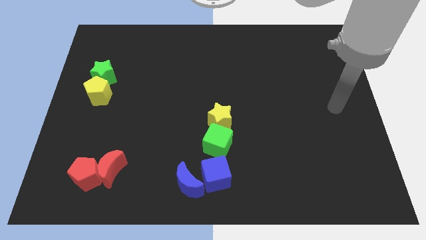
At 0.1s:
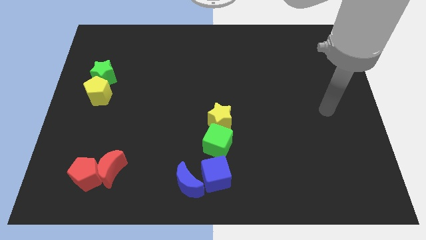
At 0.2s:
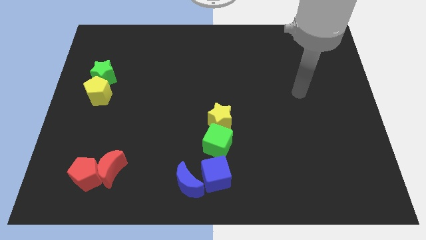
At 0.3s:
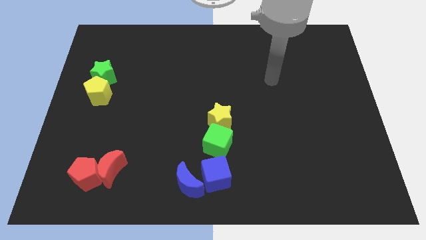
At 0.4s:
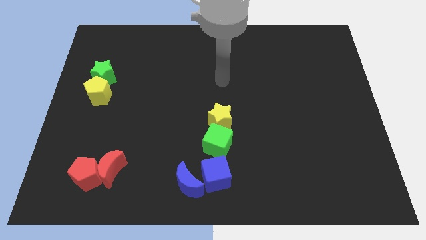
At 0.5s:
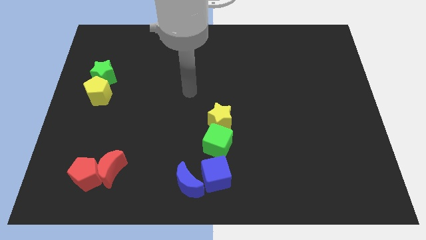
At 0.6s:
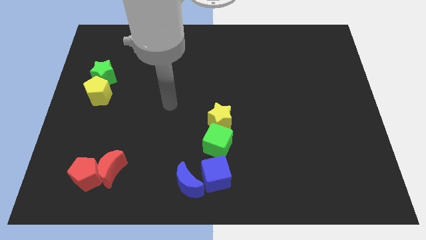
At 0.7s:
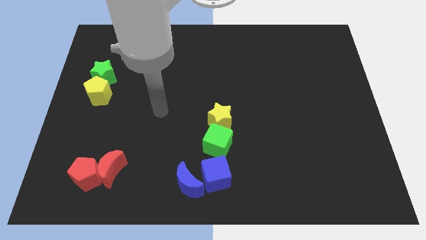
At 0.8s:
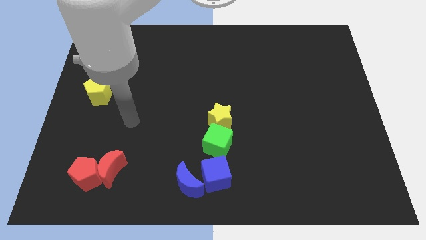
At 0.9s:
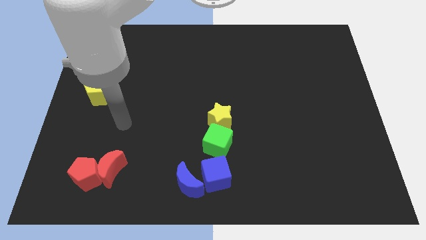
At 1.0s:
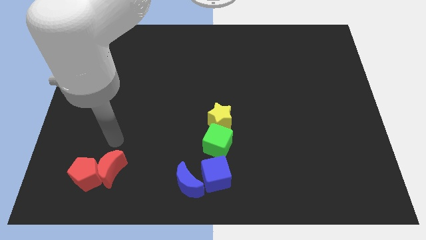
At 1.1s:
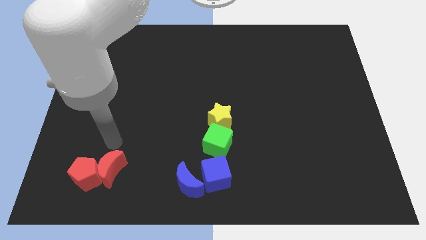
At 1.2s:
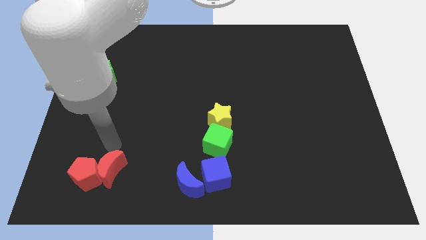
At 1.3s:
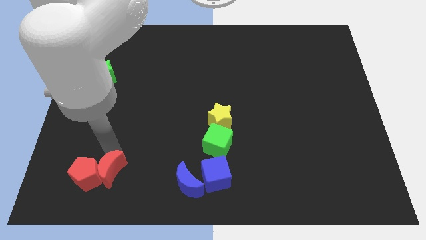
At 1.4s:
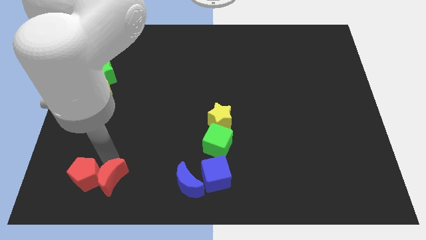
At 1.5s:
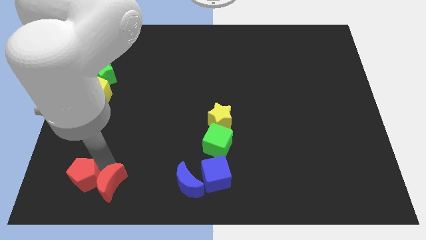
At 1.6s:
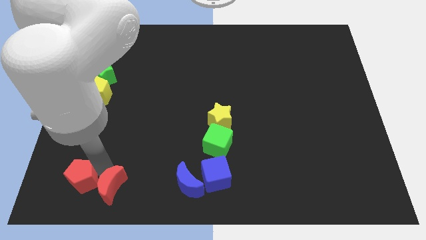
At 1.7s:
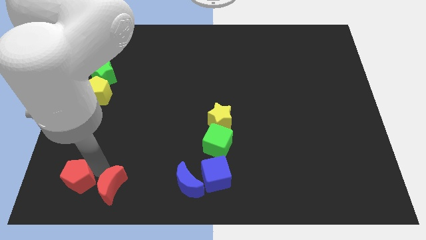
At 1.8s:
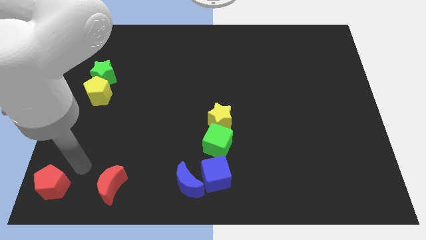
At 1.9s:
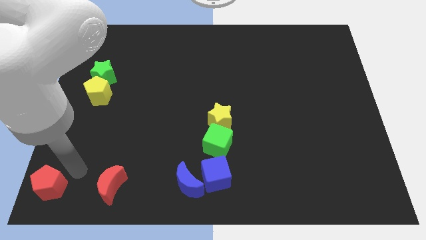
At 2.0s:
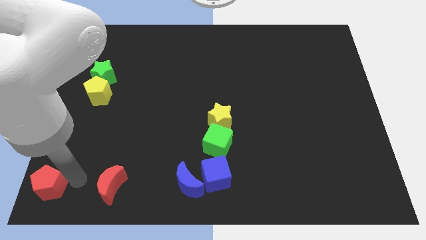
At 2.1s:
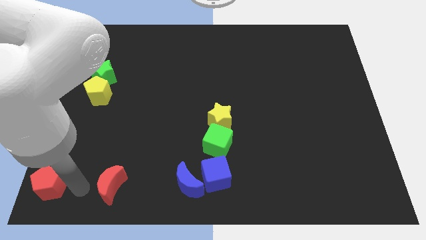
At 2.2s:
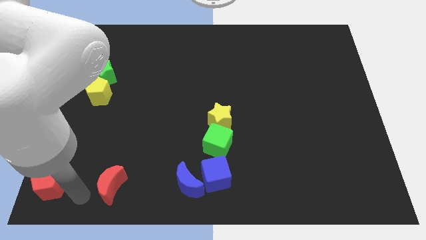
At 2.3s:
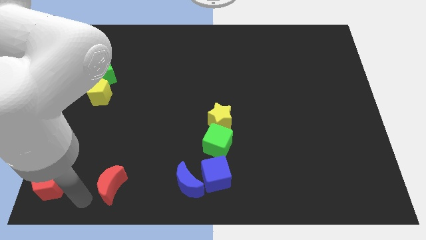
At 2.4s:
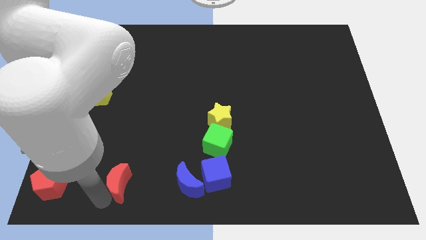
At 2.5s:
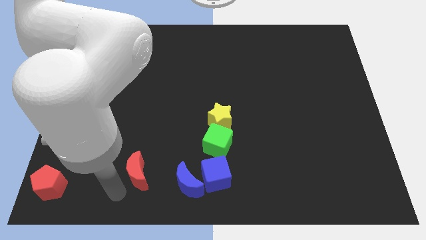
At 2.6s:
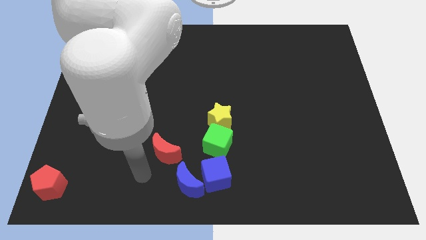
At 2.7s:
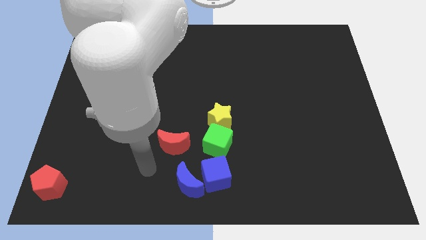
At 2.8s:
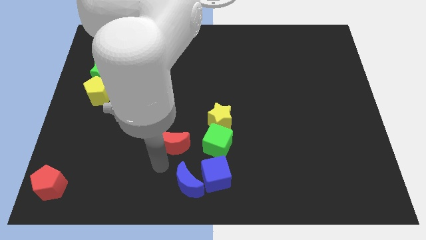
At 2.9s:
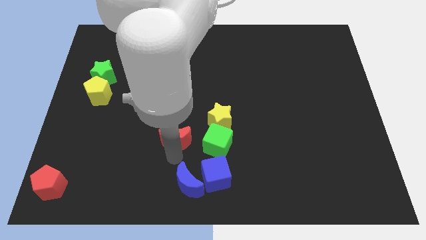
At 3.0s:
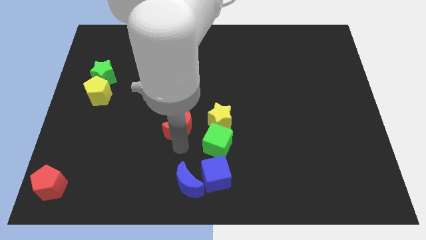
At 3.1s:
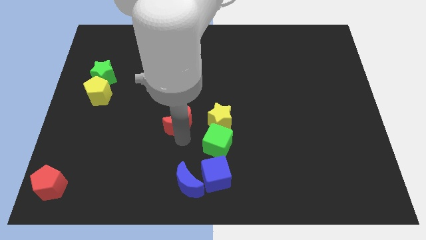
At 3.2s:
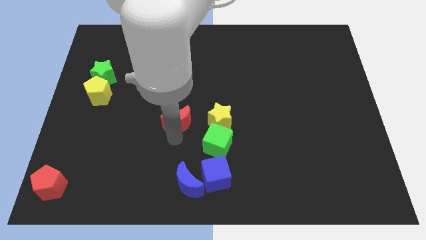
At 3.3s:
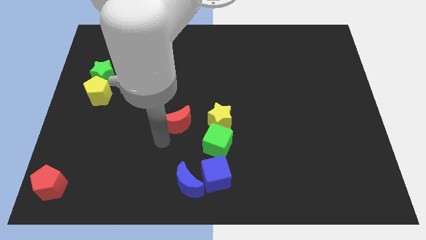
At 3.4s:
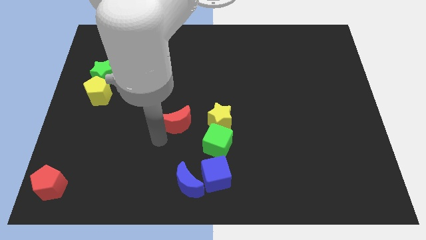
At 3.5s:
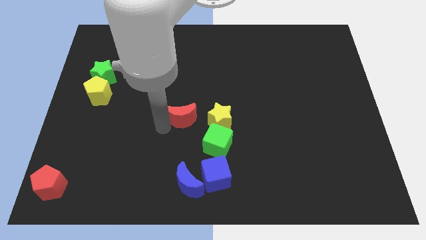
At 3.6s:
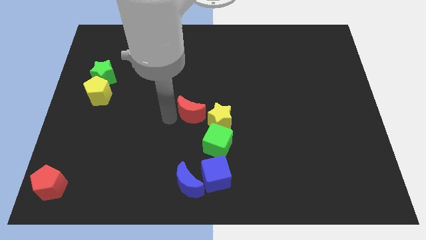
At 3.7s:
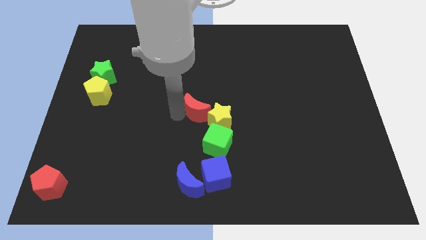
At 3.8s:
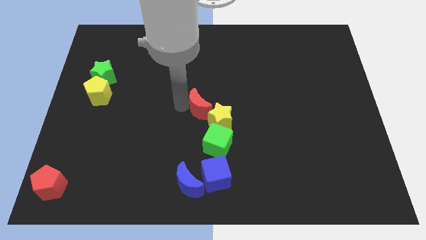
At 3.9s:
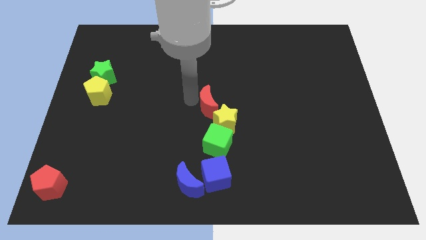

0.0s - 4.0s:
slide the red moon to the yellow star

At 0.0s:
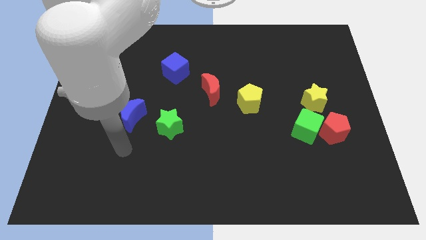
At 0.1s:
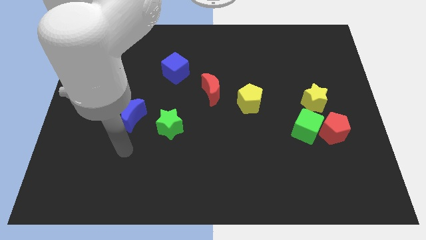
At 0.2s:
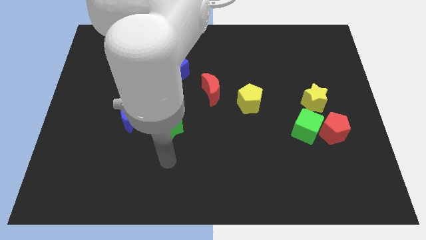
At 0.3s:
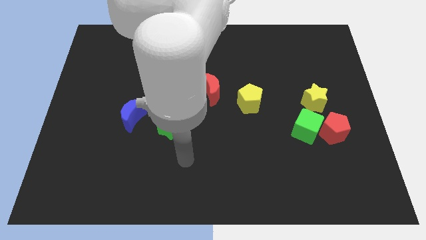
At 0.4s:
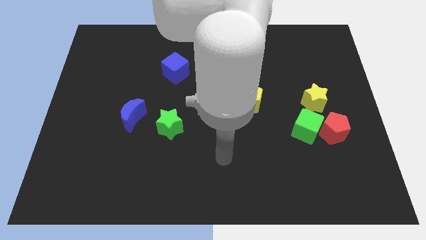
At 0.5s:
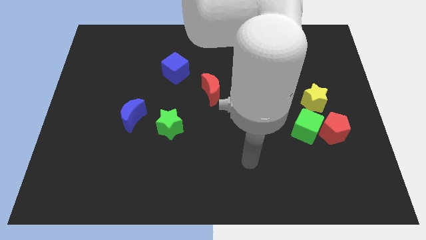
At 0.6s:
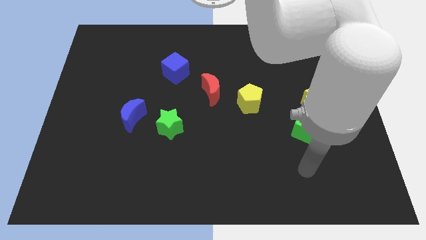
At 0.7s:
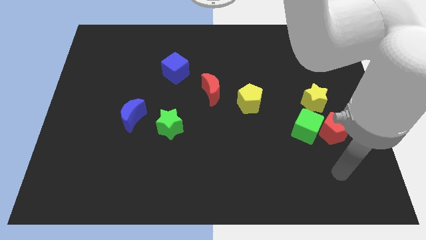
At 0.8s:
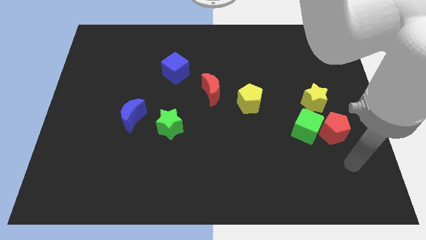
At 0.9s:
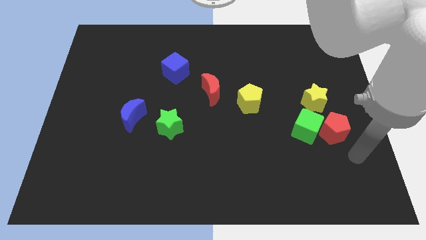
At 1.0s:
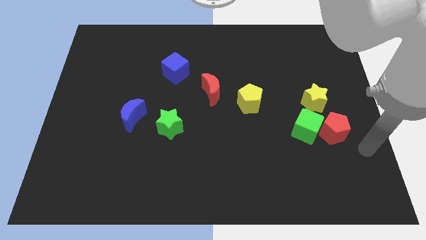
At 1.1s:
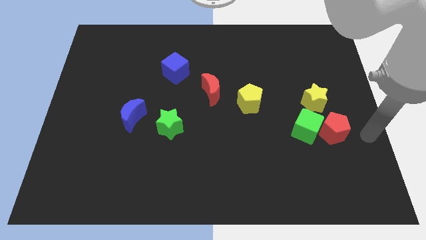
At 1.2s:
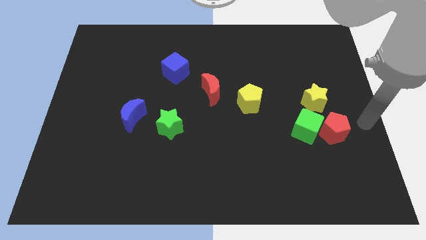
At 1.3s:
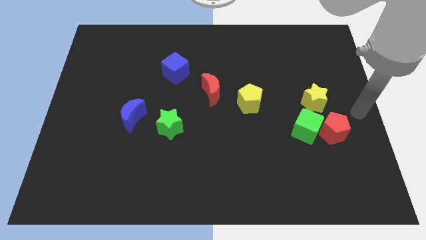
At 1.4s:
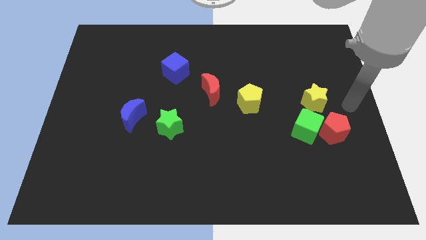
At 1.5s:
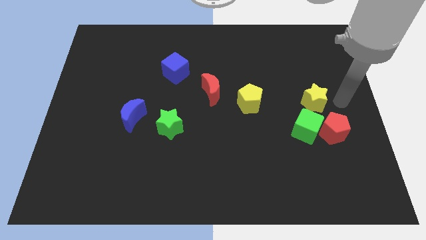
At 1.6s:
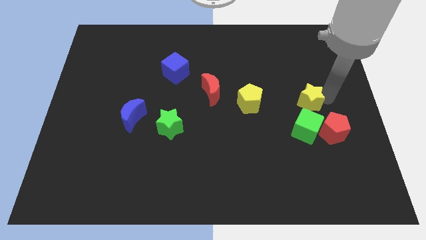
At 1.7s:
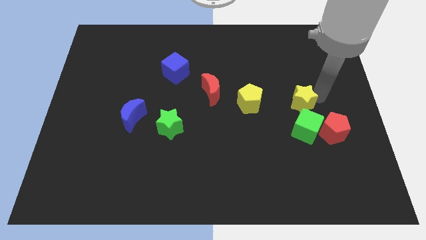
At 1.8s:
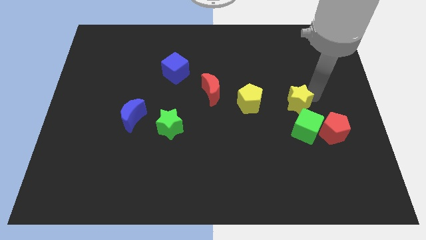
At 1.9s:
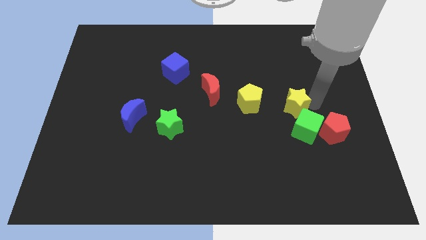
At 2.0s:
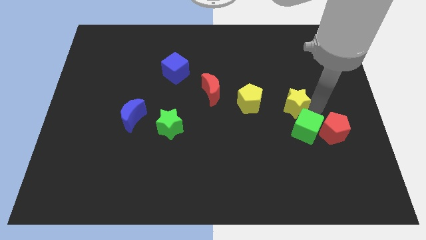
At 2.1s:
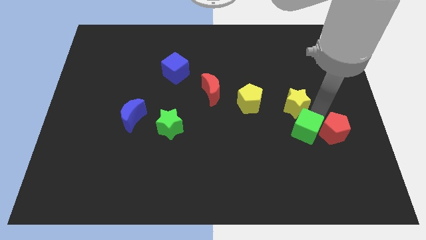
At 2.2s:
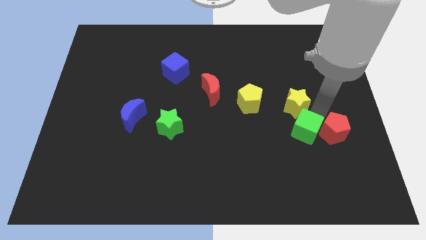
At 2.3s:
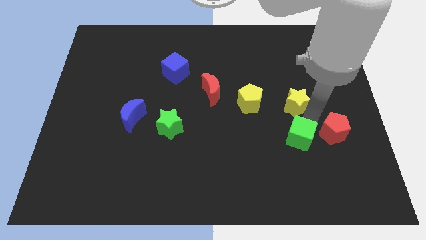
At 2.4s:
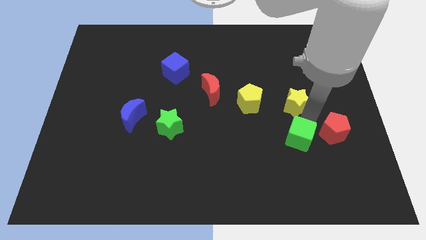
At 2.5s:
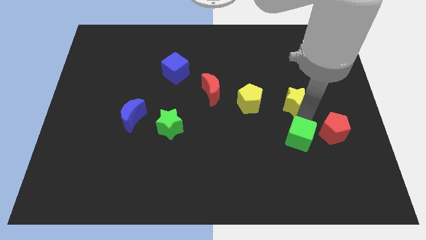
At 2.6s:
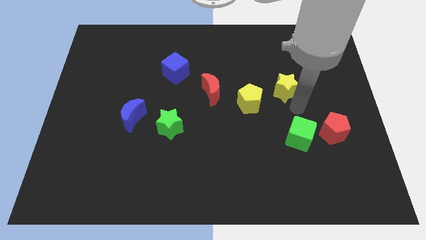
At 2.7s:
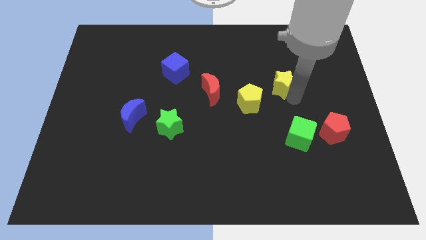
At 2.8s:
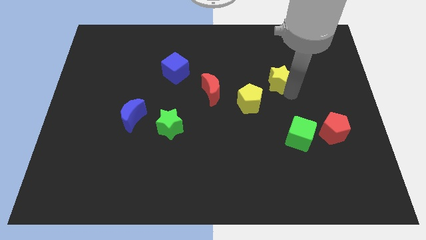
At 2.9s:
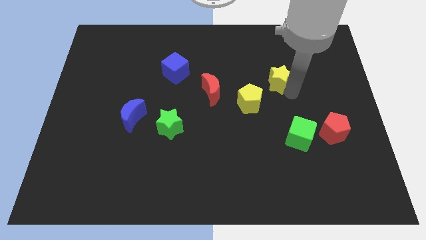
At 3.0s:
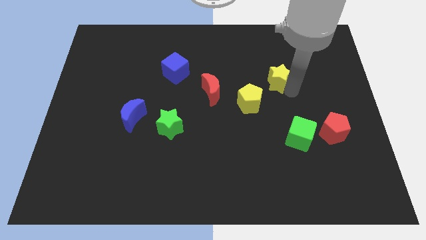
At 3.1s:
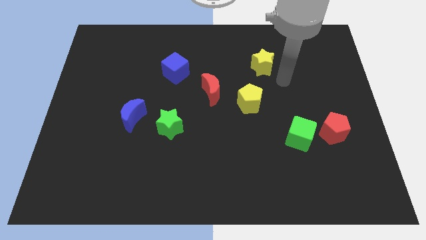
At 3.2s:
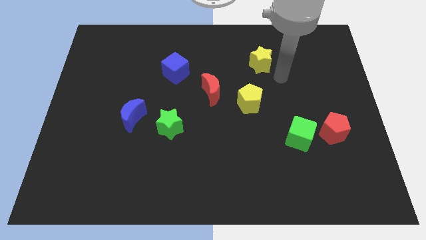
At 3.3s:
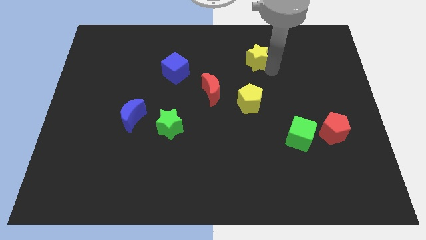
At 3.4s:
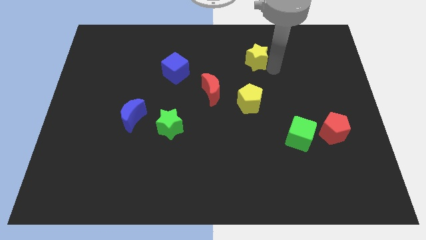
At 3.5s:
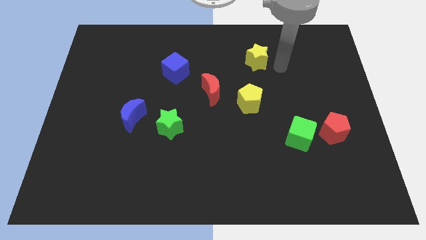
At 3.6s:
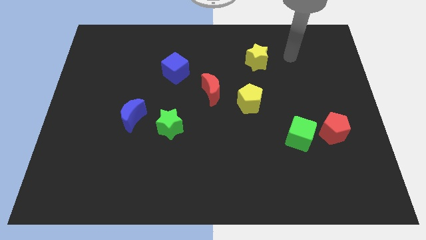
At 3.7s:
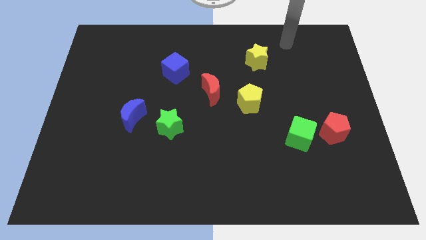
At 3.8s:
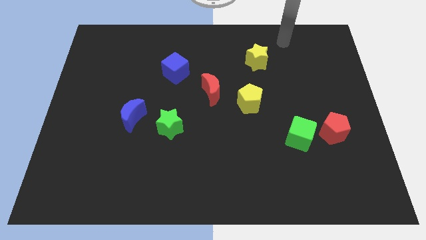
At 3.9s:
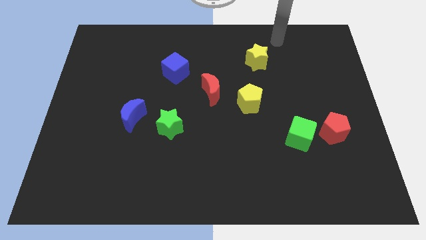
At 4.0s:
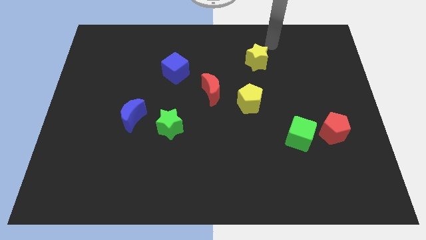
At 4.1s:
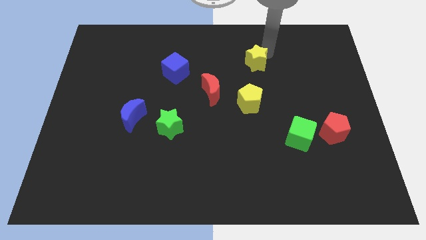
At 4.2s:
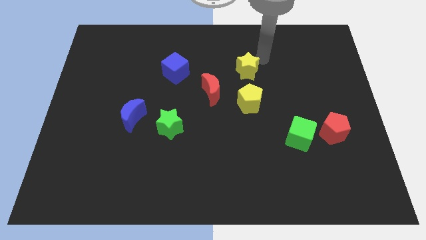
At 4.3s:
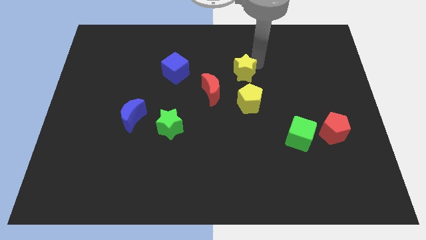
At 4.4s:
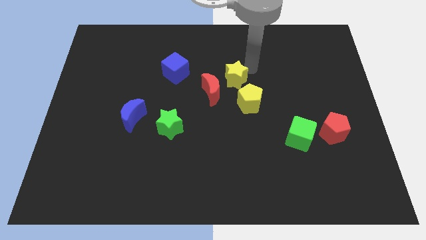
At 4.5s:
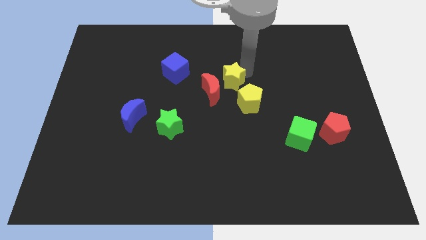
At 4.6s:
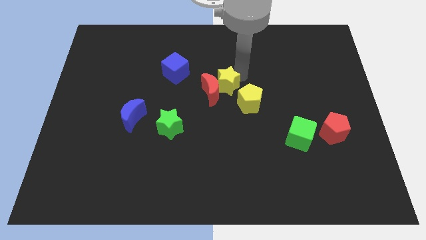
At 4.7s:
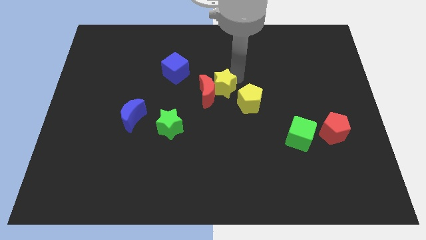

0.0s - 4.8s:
slide the yellow star close to the red moon
